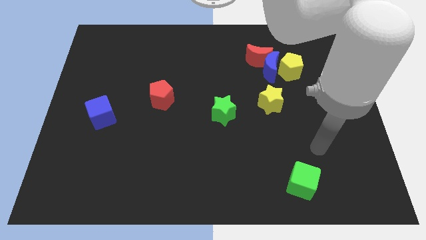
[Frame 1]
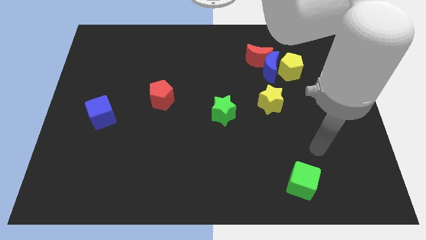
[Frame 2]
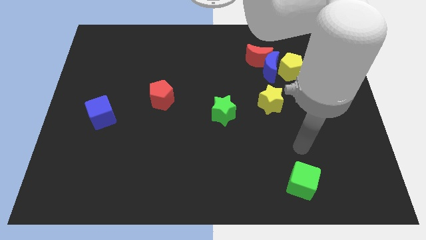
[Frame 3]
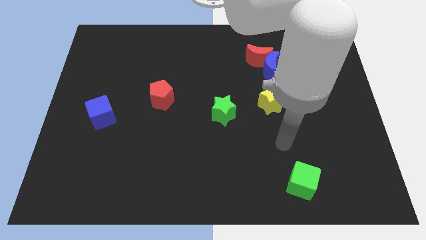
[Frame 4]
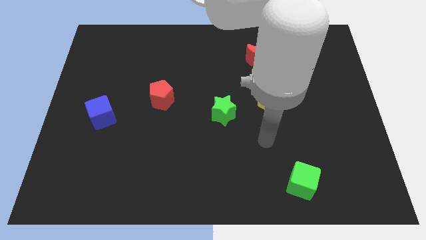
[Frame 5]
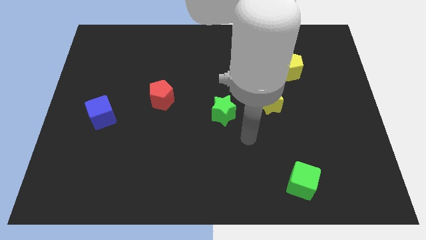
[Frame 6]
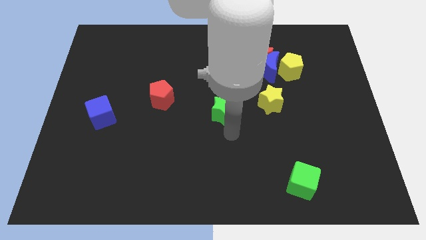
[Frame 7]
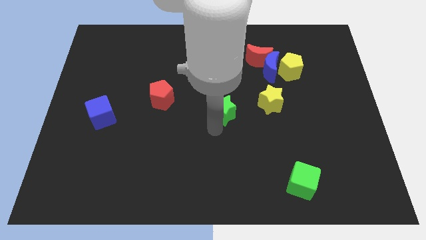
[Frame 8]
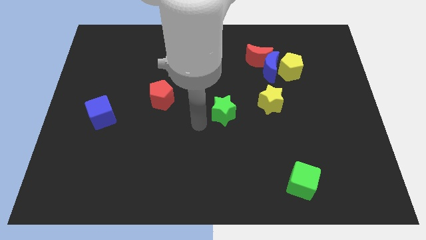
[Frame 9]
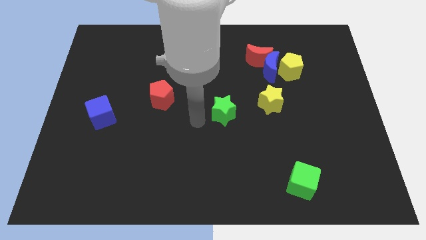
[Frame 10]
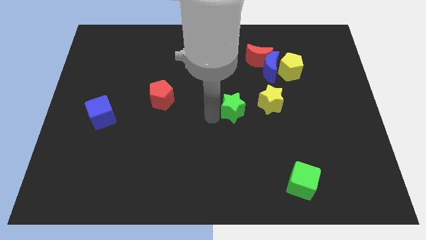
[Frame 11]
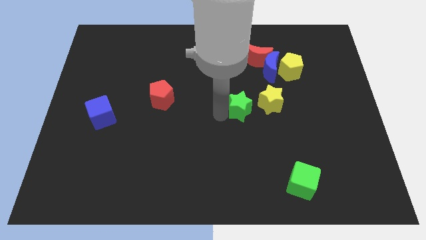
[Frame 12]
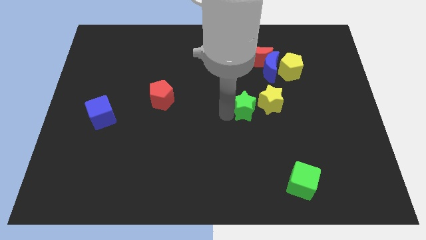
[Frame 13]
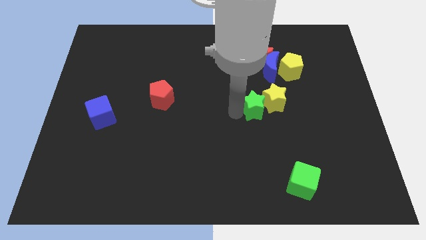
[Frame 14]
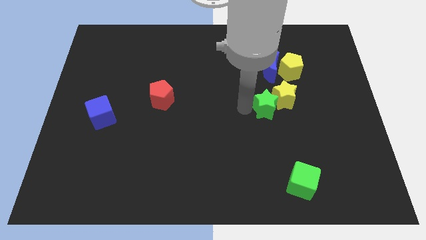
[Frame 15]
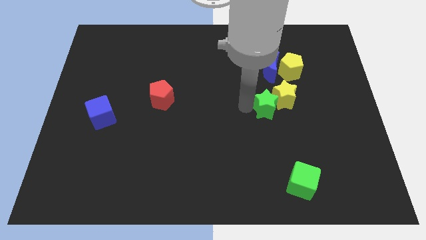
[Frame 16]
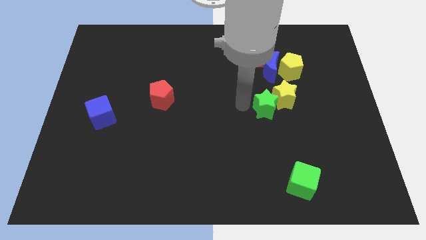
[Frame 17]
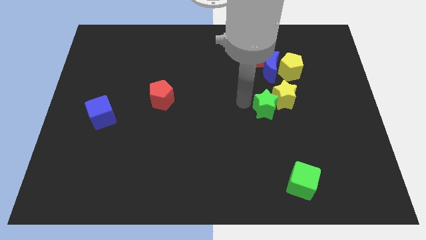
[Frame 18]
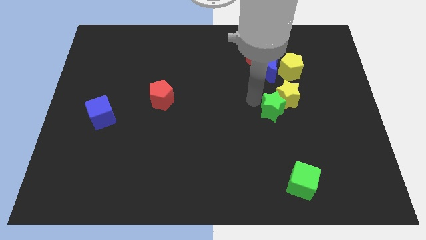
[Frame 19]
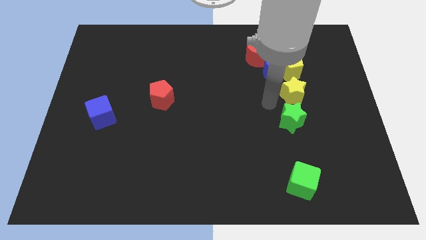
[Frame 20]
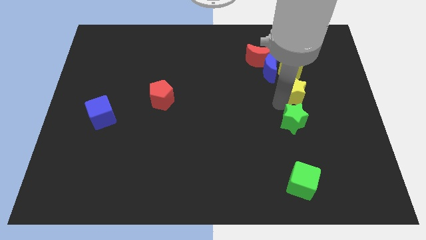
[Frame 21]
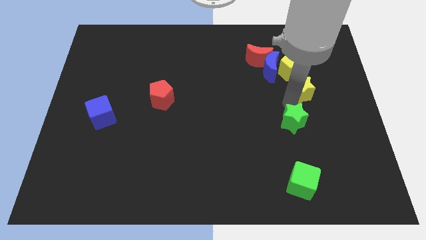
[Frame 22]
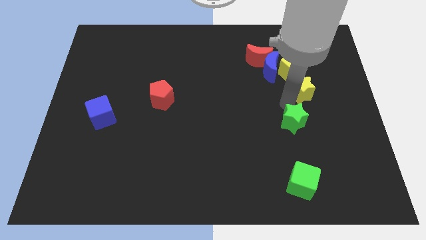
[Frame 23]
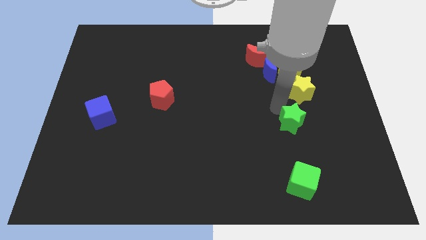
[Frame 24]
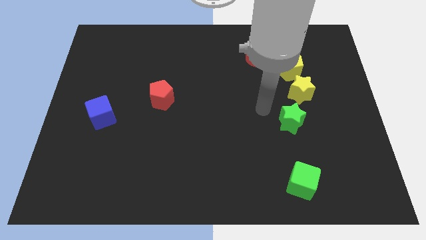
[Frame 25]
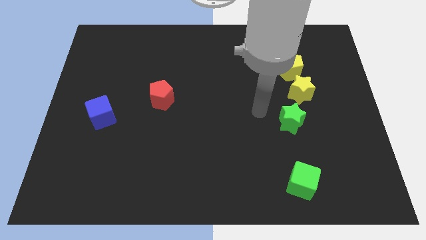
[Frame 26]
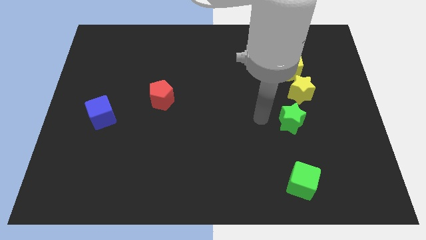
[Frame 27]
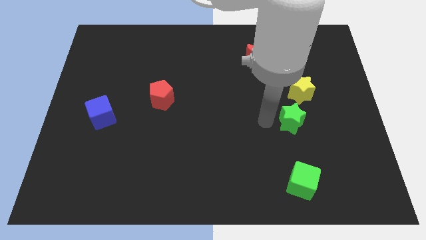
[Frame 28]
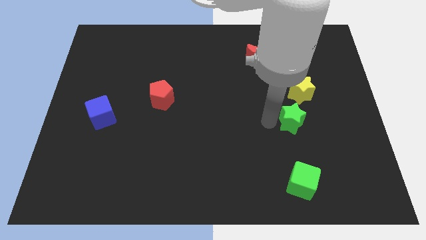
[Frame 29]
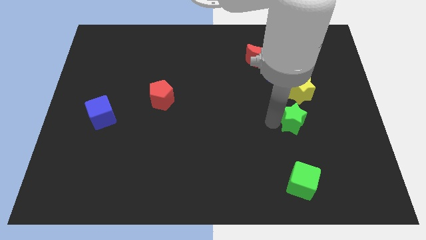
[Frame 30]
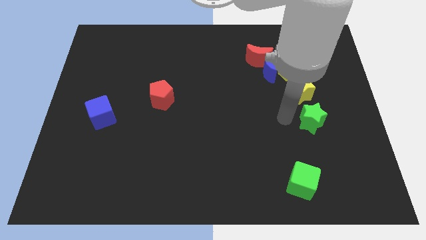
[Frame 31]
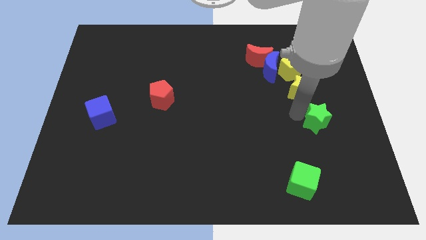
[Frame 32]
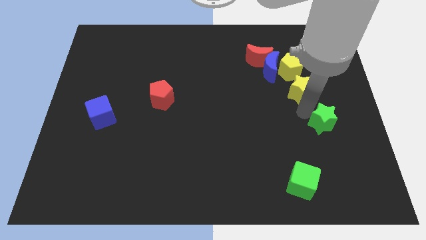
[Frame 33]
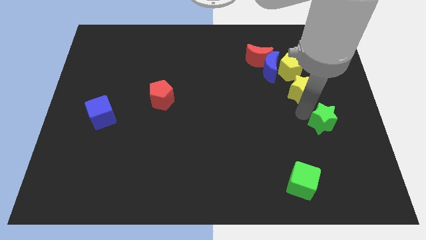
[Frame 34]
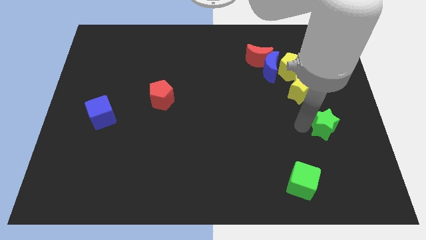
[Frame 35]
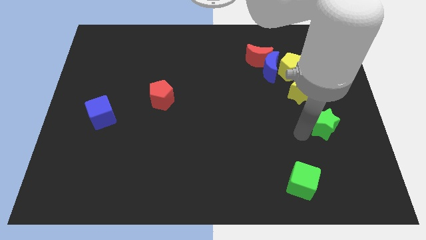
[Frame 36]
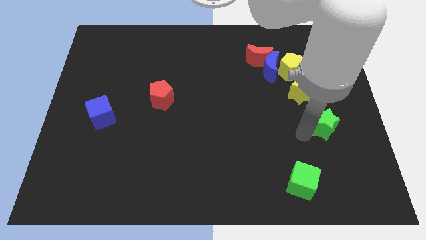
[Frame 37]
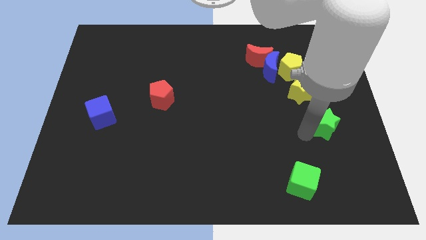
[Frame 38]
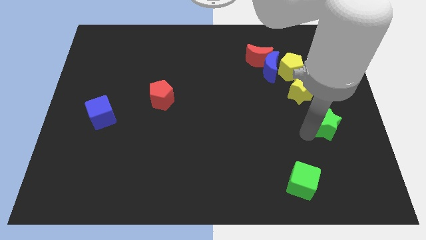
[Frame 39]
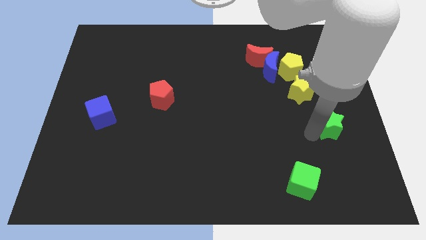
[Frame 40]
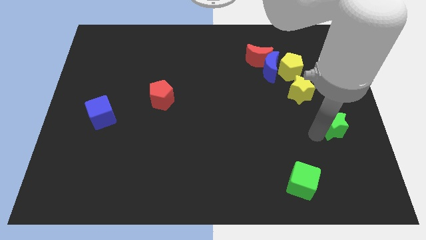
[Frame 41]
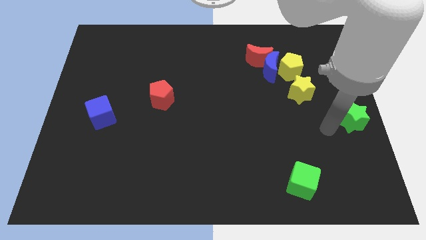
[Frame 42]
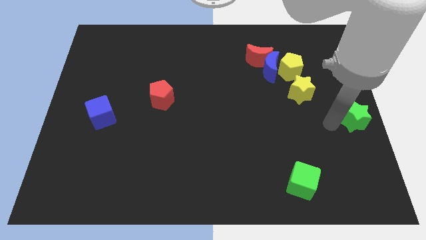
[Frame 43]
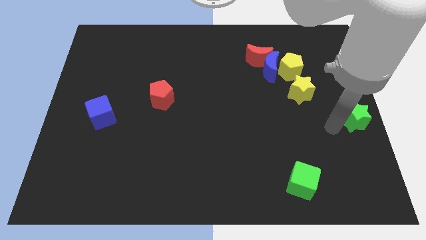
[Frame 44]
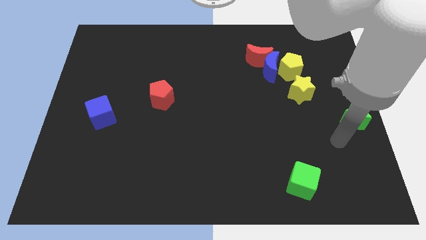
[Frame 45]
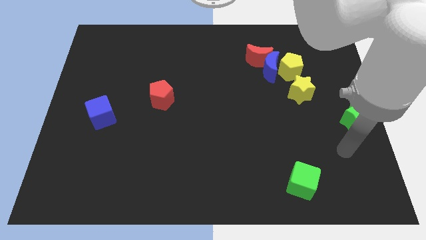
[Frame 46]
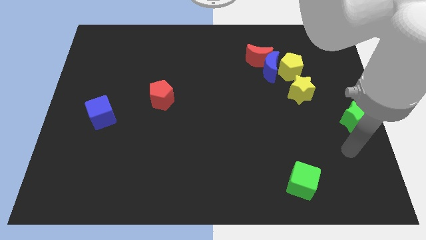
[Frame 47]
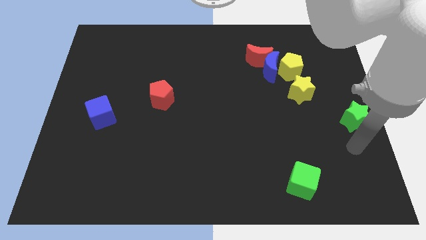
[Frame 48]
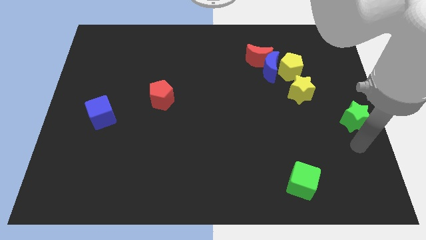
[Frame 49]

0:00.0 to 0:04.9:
push the green star to the center right of the board

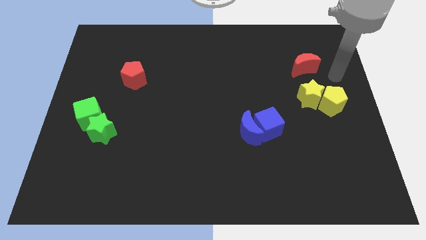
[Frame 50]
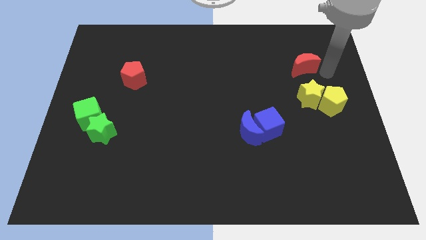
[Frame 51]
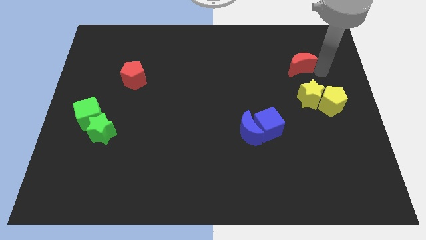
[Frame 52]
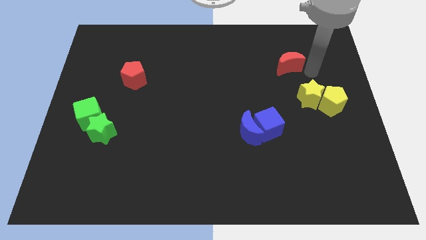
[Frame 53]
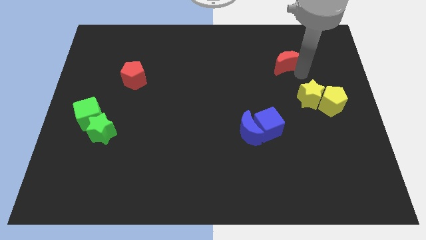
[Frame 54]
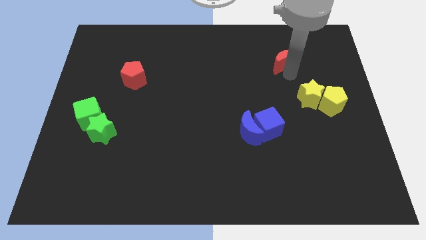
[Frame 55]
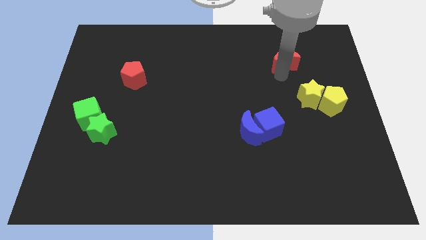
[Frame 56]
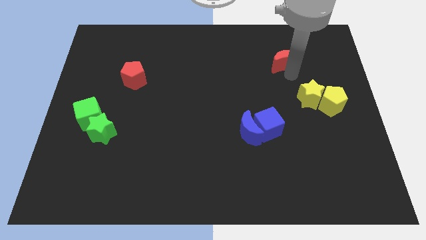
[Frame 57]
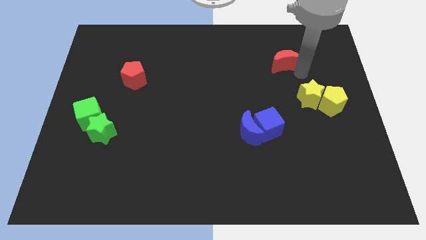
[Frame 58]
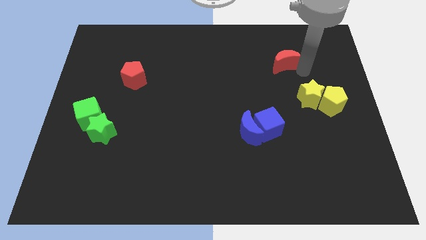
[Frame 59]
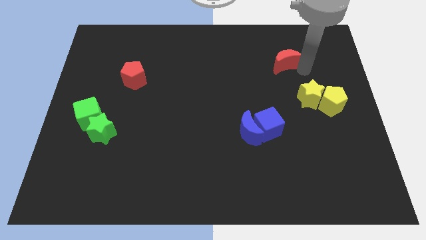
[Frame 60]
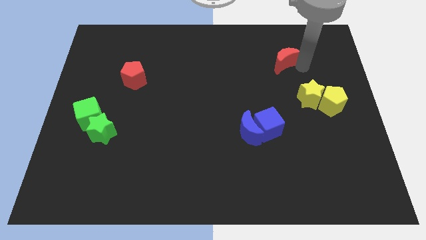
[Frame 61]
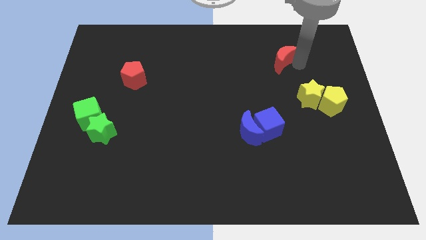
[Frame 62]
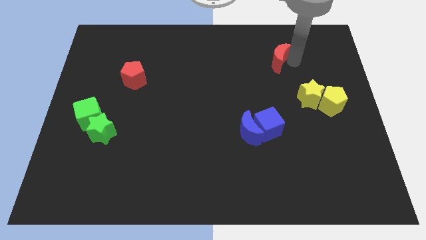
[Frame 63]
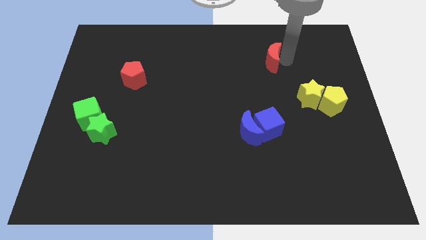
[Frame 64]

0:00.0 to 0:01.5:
place the red moon above the blue cube

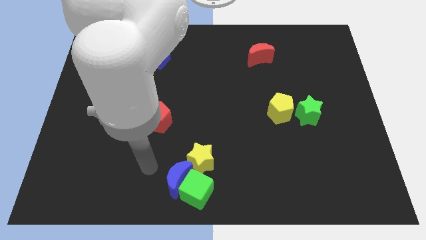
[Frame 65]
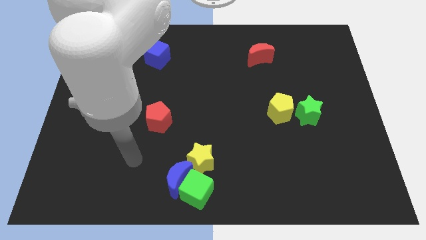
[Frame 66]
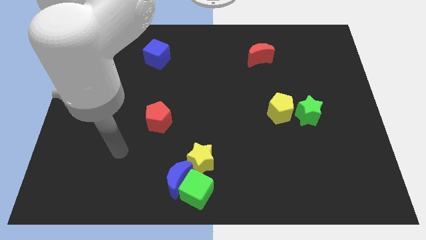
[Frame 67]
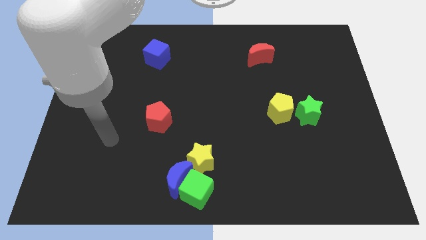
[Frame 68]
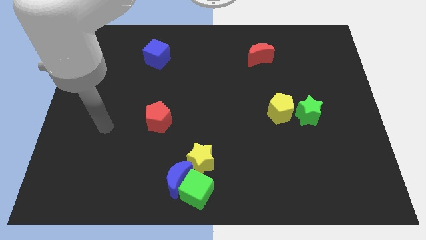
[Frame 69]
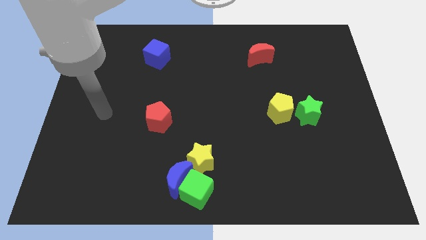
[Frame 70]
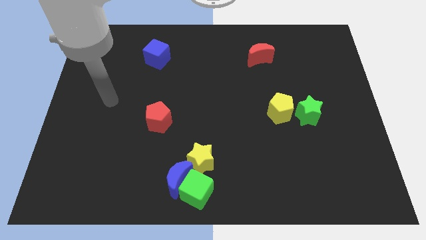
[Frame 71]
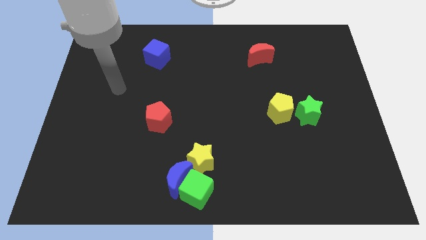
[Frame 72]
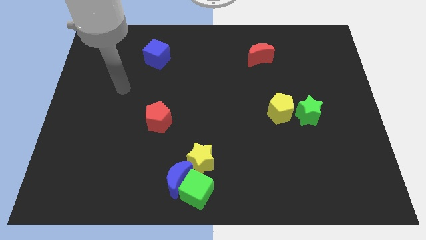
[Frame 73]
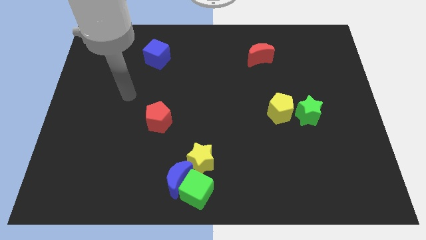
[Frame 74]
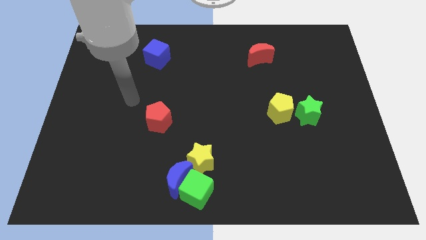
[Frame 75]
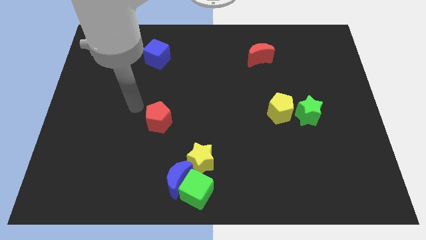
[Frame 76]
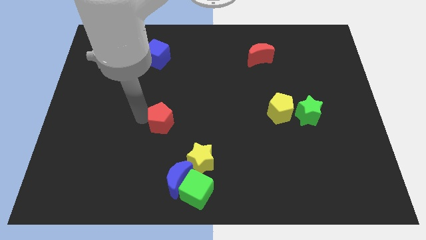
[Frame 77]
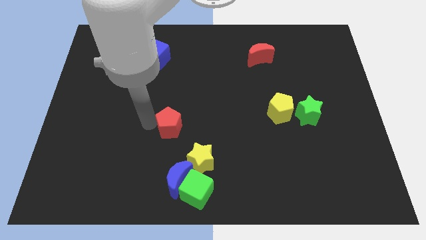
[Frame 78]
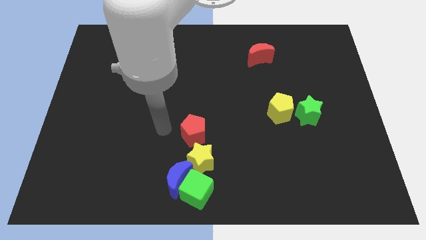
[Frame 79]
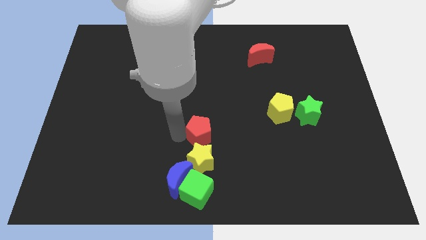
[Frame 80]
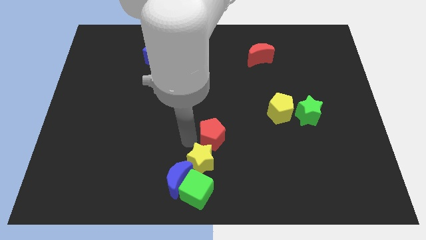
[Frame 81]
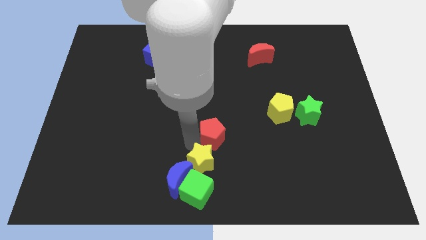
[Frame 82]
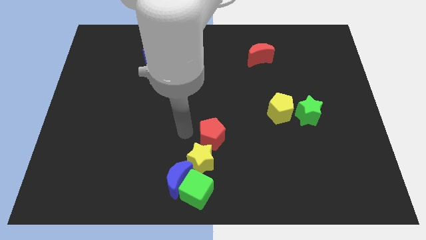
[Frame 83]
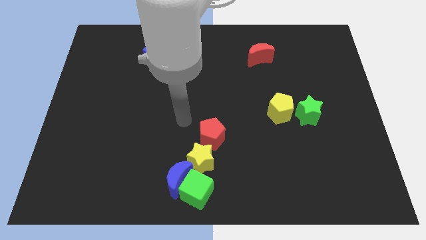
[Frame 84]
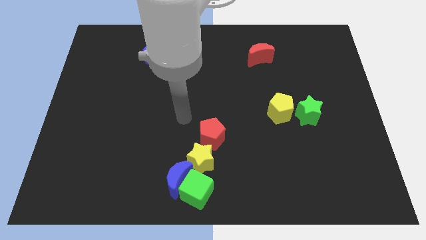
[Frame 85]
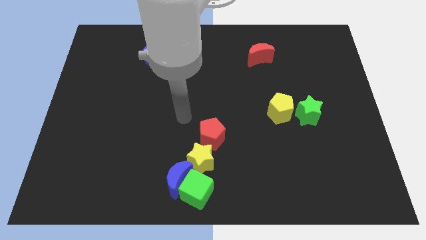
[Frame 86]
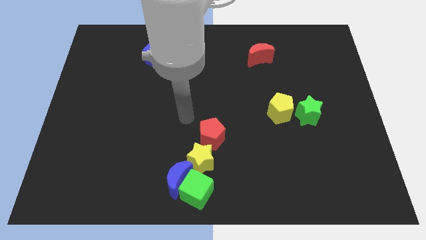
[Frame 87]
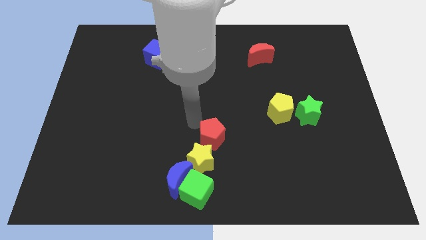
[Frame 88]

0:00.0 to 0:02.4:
move the red pentagon to the top right of the yellow star

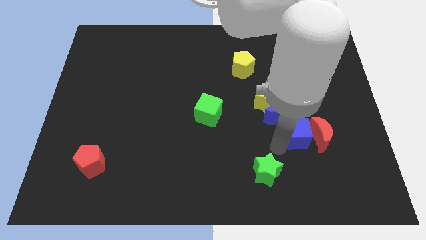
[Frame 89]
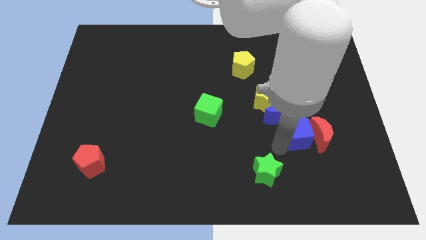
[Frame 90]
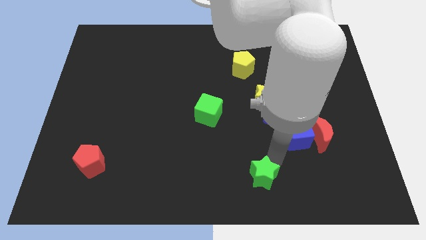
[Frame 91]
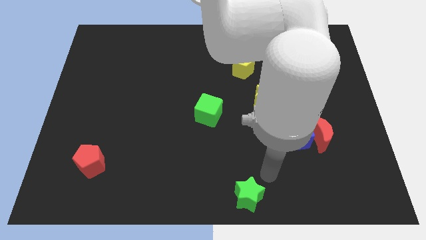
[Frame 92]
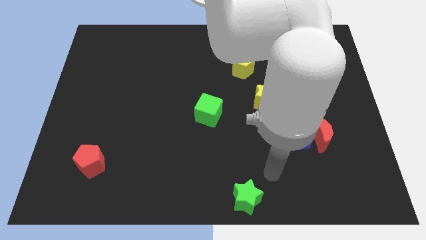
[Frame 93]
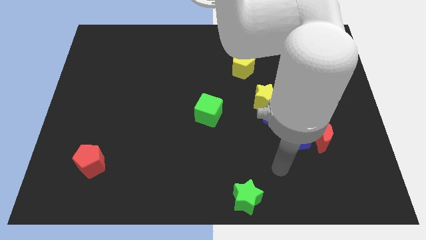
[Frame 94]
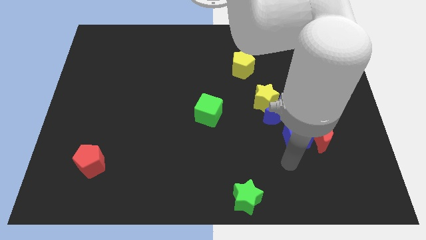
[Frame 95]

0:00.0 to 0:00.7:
push the green star towards the bottom side
